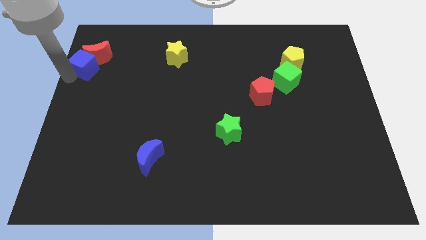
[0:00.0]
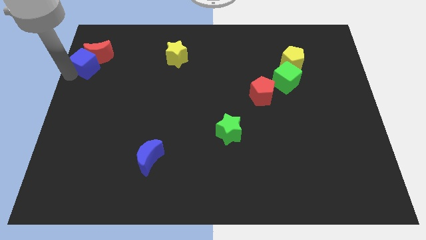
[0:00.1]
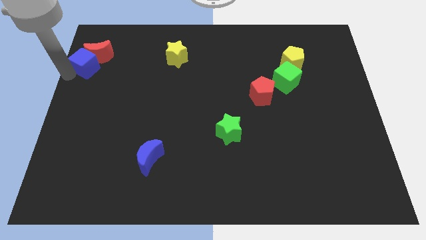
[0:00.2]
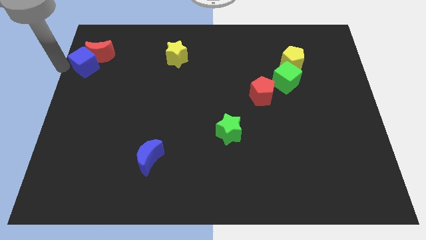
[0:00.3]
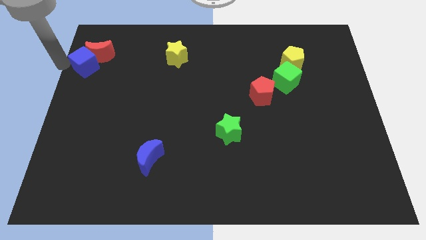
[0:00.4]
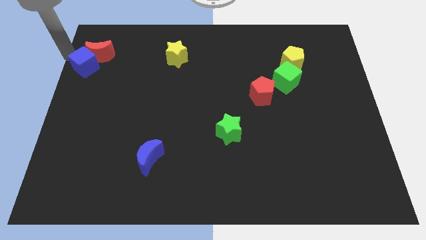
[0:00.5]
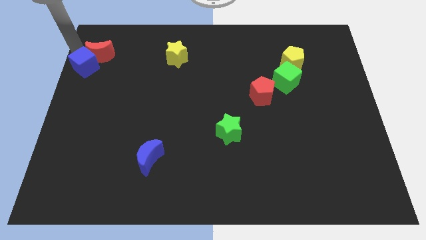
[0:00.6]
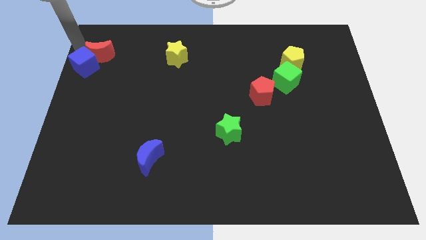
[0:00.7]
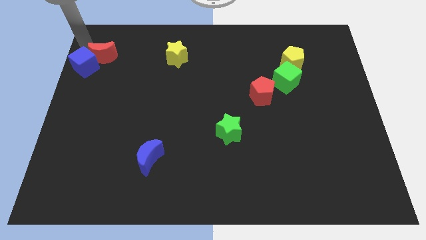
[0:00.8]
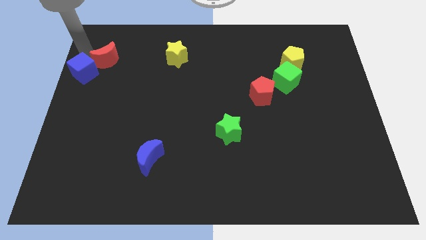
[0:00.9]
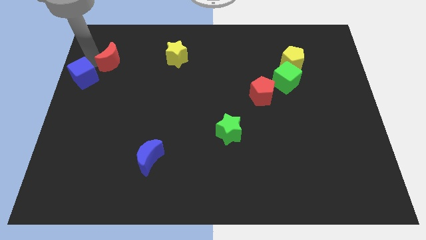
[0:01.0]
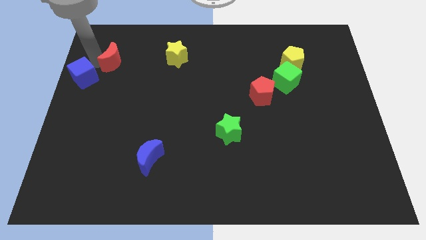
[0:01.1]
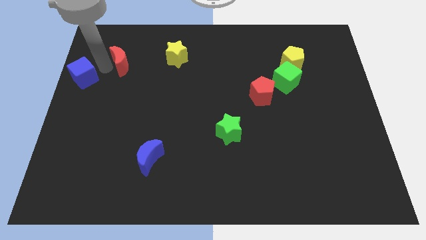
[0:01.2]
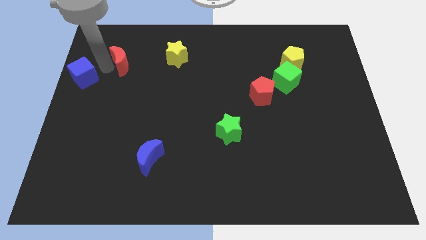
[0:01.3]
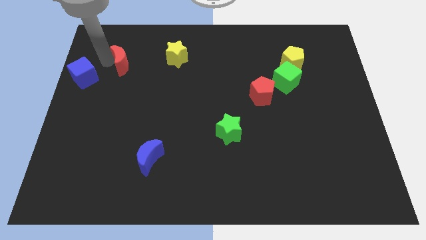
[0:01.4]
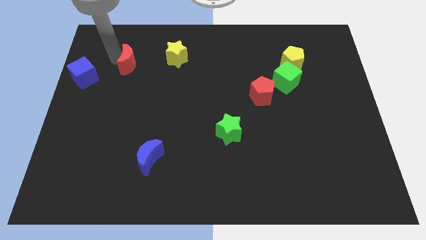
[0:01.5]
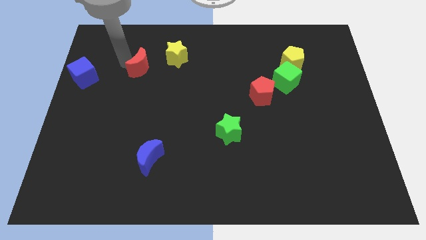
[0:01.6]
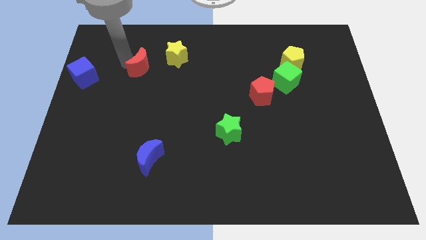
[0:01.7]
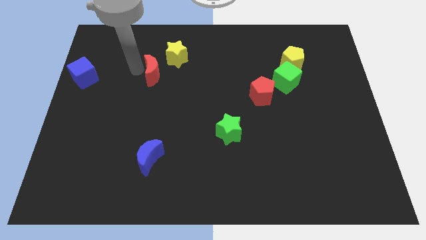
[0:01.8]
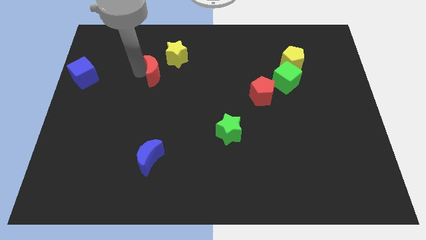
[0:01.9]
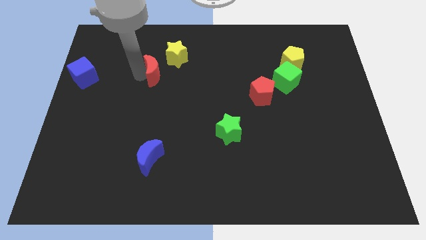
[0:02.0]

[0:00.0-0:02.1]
separate red moon from blue cube

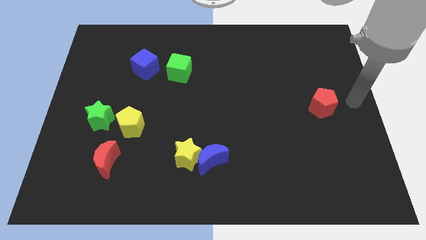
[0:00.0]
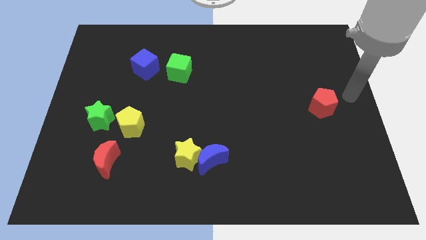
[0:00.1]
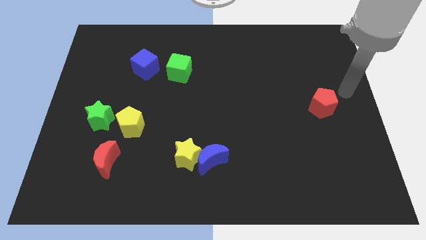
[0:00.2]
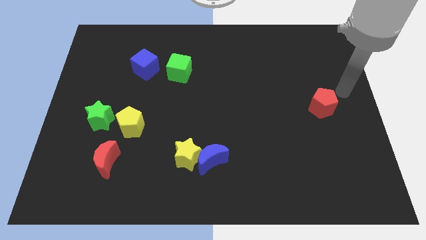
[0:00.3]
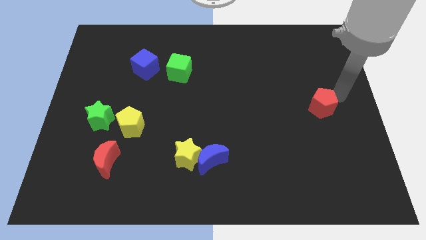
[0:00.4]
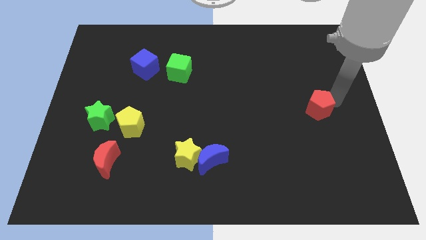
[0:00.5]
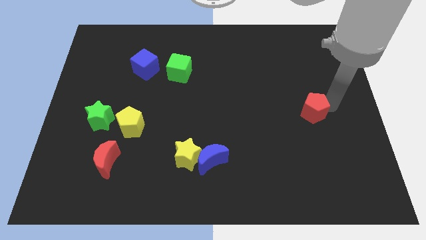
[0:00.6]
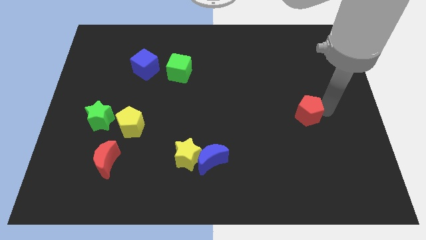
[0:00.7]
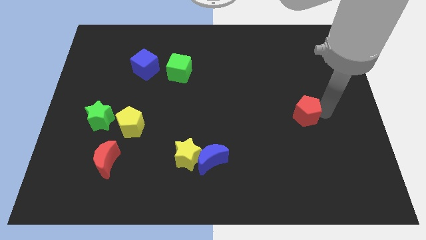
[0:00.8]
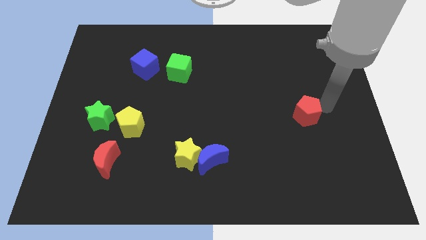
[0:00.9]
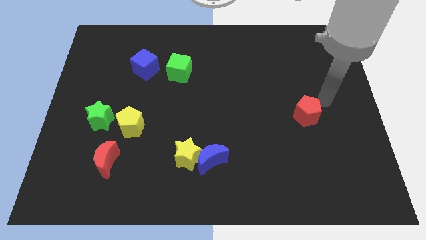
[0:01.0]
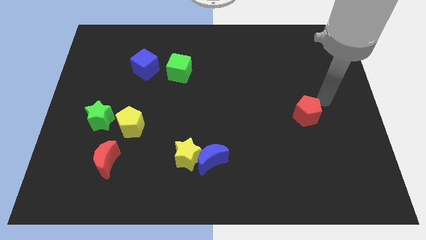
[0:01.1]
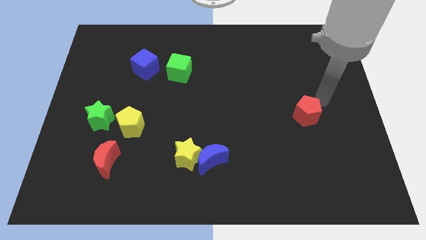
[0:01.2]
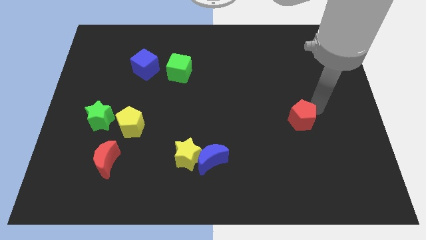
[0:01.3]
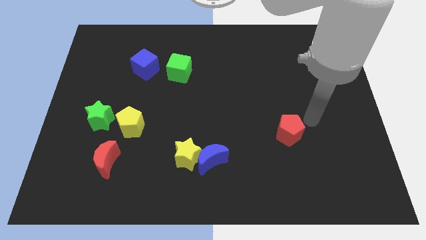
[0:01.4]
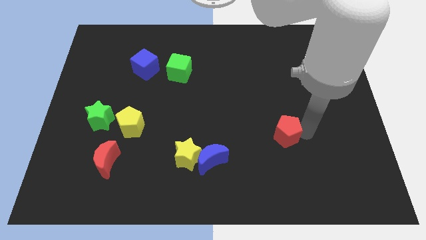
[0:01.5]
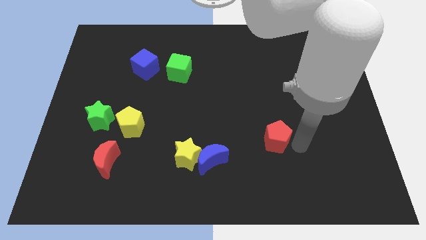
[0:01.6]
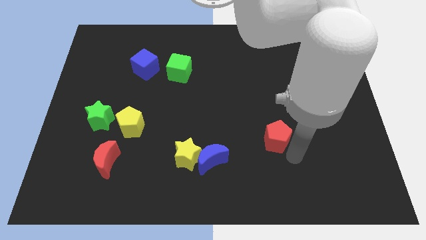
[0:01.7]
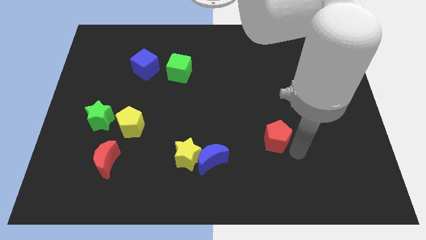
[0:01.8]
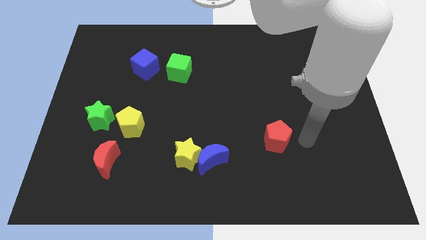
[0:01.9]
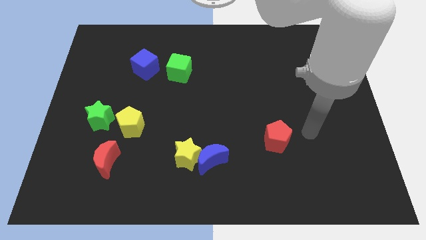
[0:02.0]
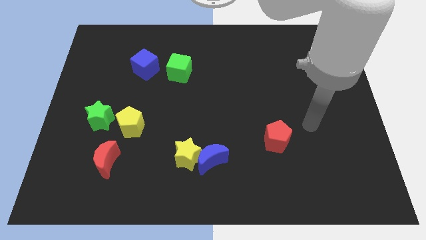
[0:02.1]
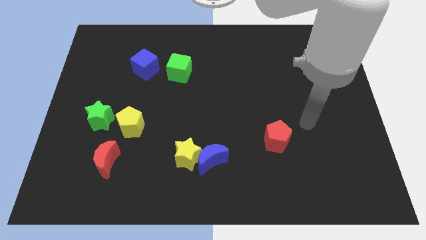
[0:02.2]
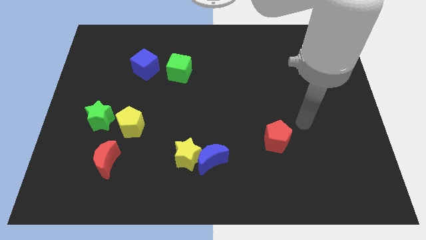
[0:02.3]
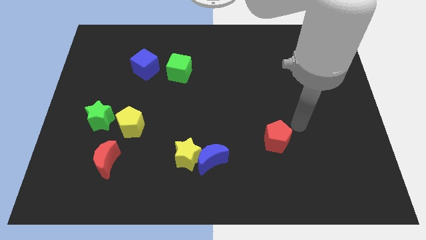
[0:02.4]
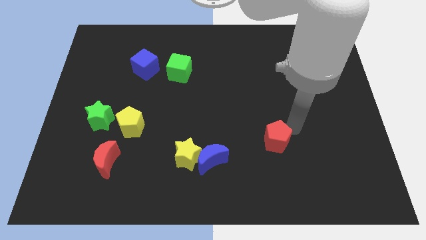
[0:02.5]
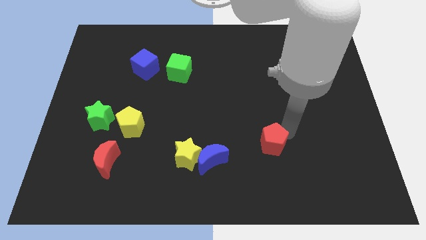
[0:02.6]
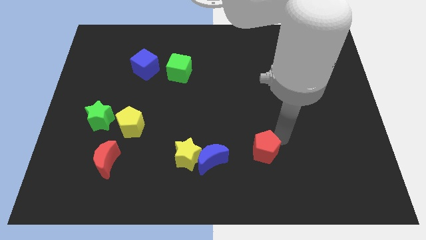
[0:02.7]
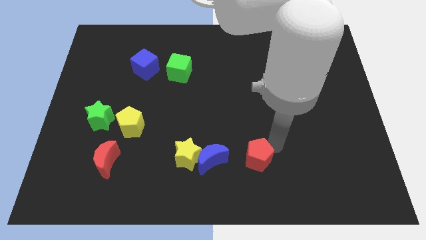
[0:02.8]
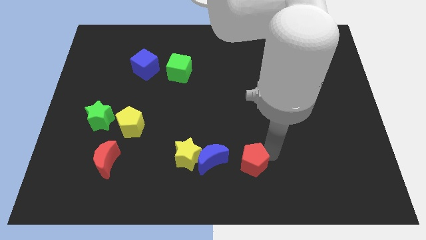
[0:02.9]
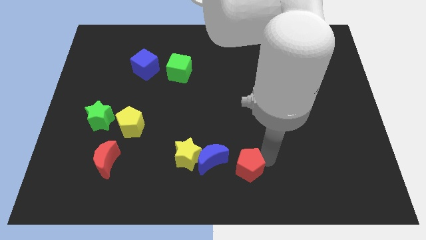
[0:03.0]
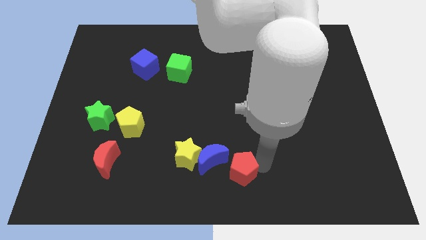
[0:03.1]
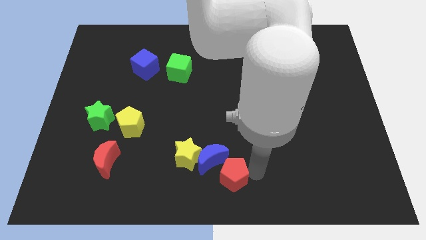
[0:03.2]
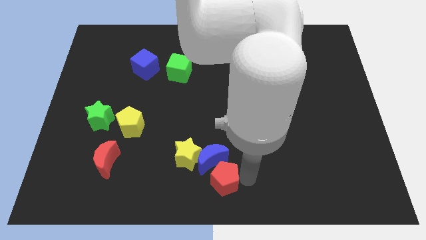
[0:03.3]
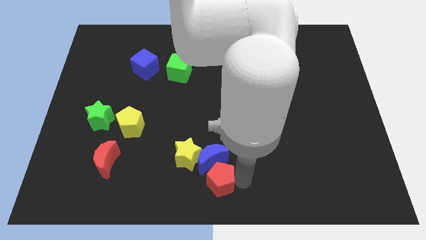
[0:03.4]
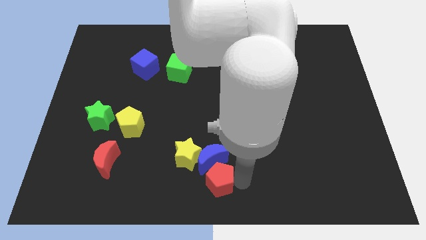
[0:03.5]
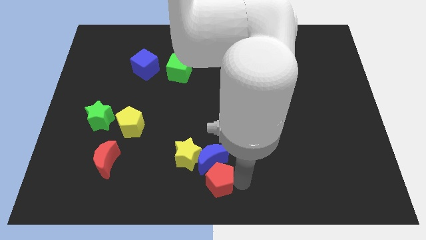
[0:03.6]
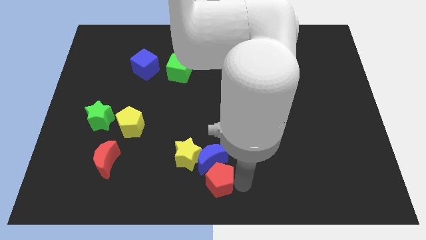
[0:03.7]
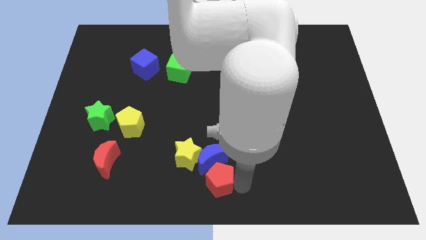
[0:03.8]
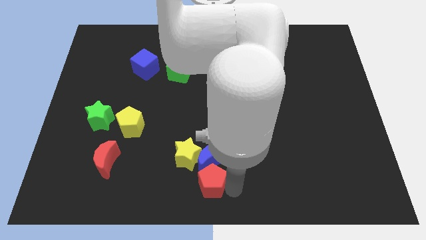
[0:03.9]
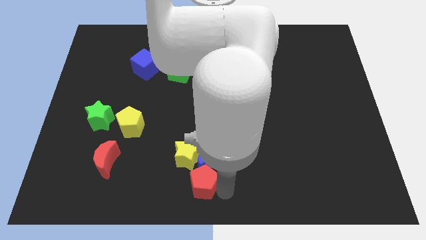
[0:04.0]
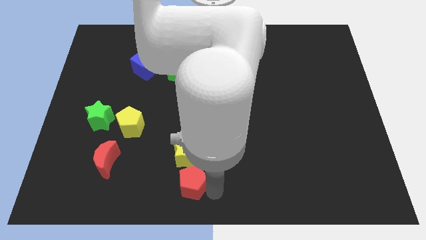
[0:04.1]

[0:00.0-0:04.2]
push red pentagon to bottom center of the board

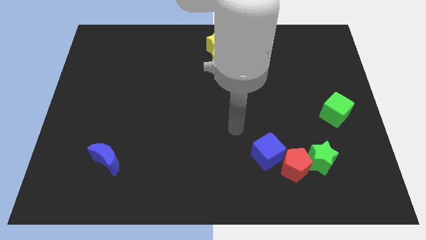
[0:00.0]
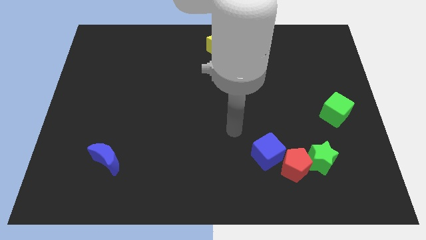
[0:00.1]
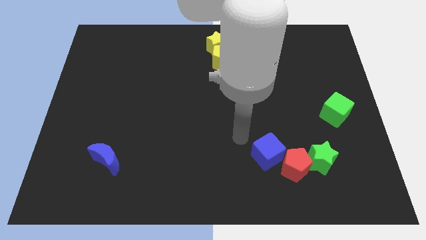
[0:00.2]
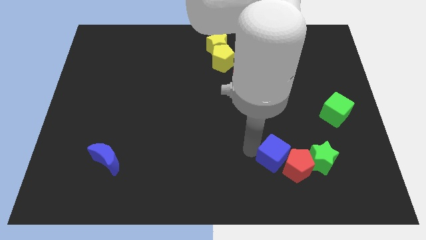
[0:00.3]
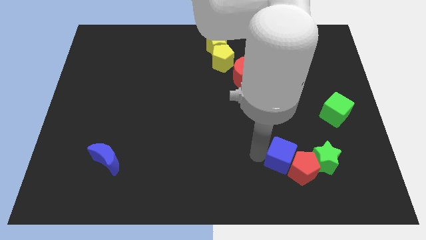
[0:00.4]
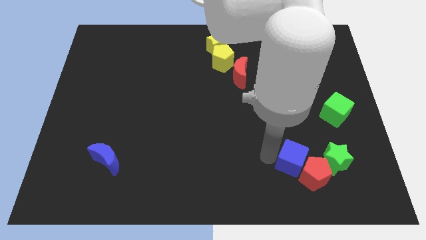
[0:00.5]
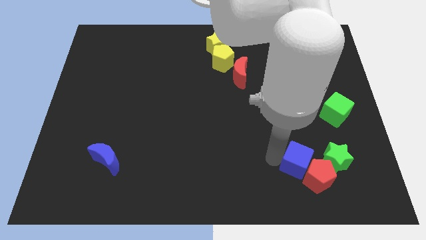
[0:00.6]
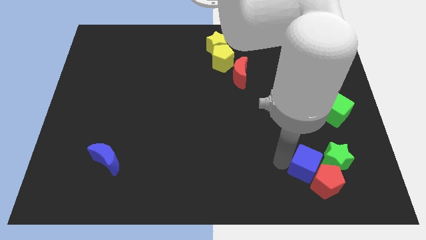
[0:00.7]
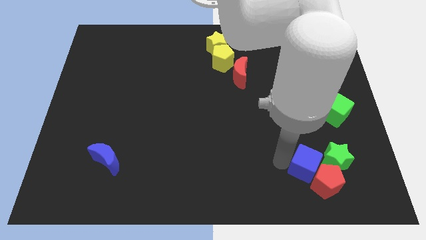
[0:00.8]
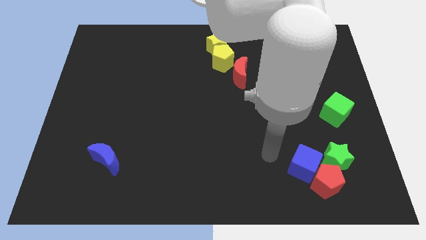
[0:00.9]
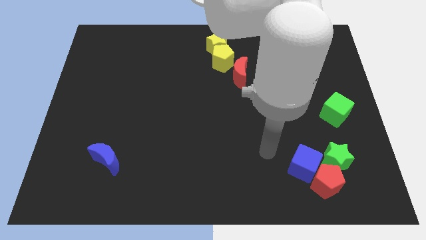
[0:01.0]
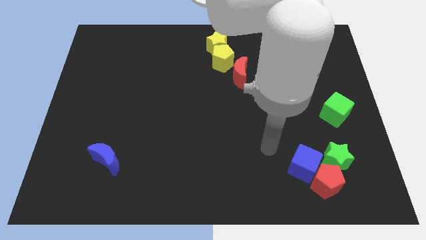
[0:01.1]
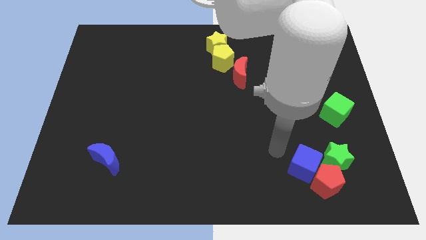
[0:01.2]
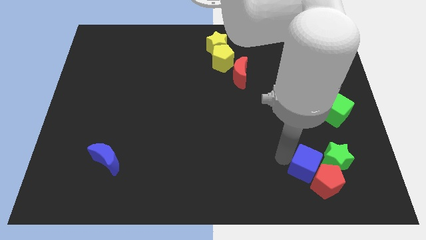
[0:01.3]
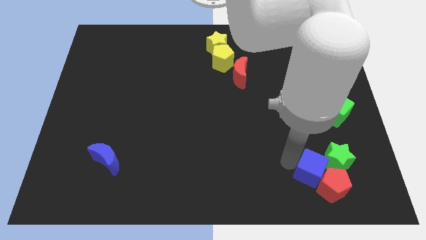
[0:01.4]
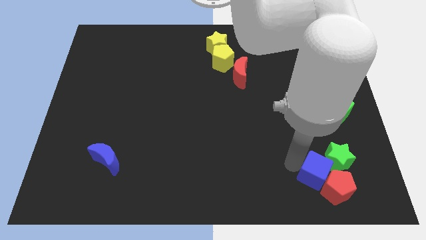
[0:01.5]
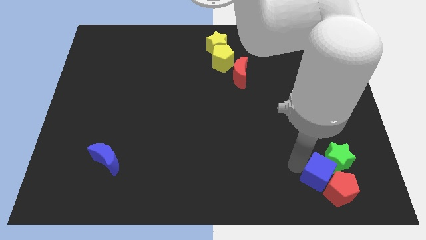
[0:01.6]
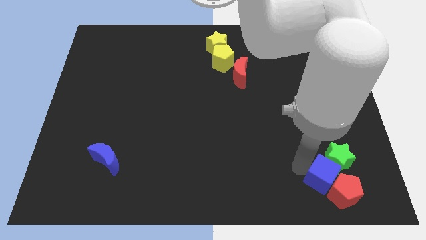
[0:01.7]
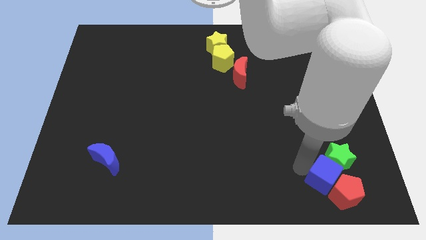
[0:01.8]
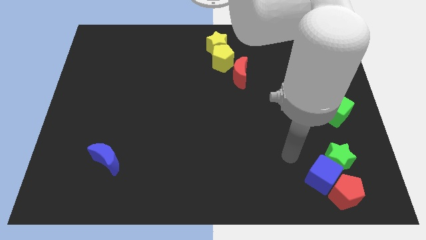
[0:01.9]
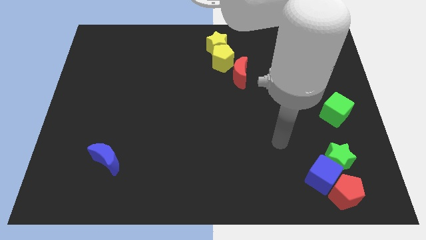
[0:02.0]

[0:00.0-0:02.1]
push the red pentagon with the blue cube towards the bottom right of the board

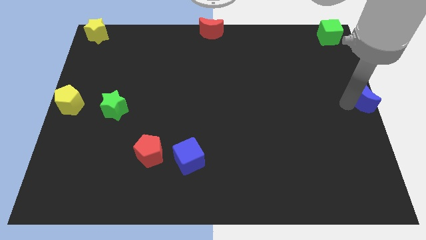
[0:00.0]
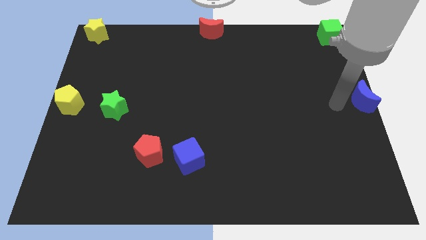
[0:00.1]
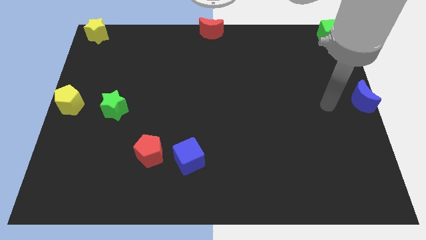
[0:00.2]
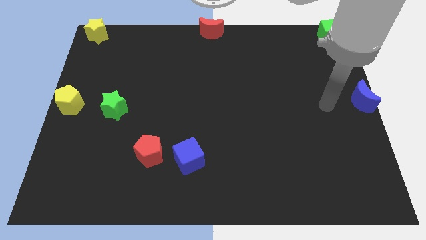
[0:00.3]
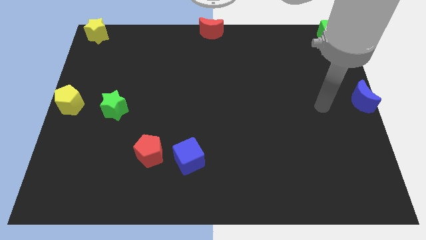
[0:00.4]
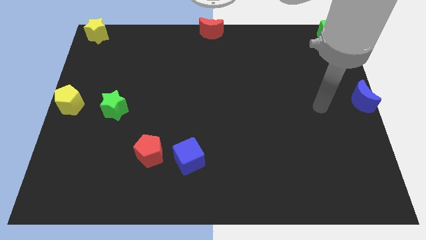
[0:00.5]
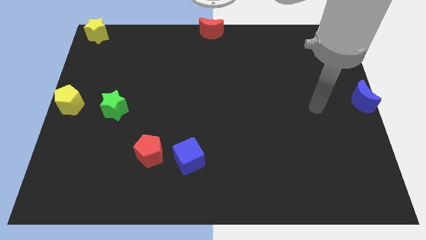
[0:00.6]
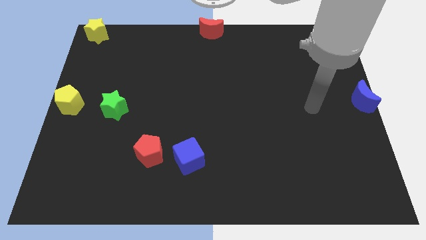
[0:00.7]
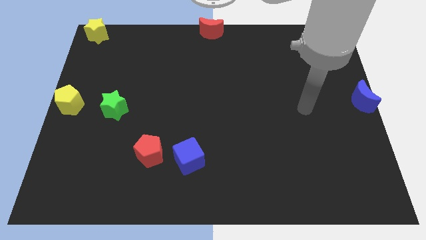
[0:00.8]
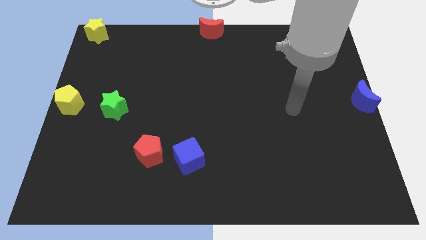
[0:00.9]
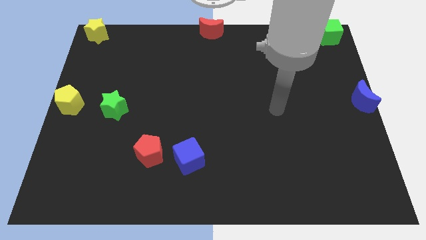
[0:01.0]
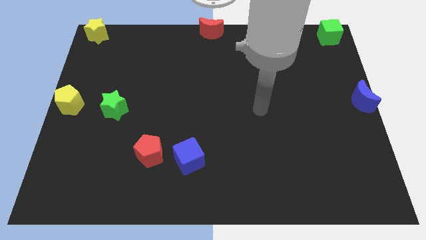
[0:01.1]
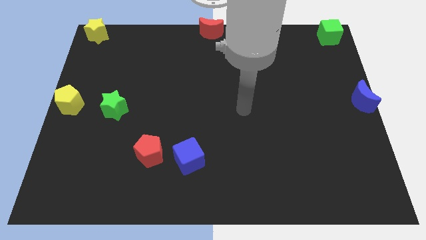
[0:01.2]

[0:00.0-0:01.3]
move the arm away from the blue moon
